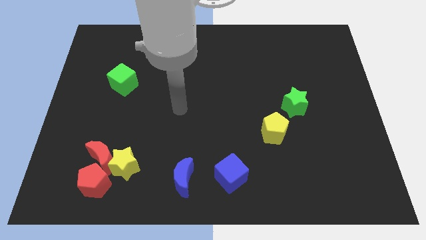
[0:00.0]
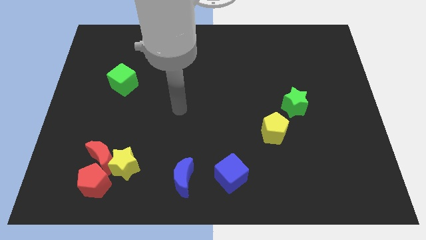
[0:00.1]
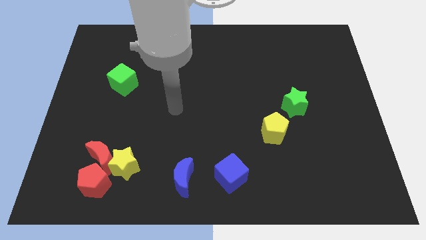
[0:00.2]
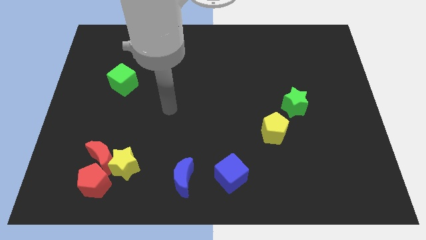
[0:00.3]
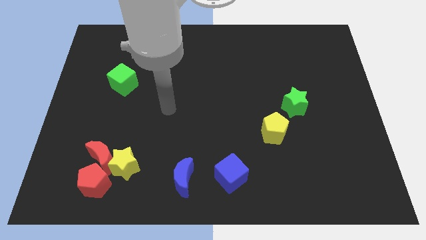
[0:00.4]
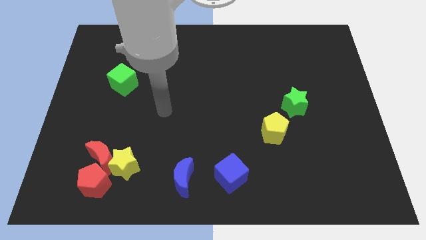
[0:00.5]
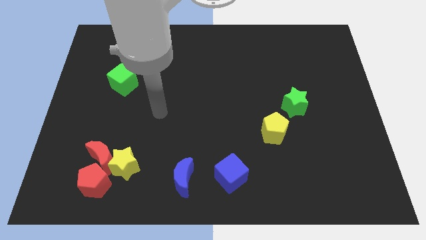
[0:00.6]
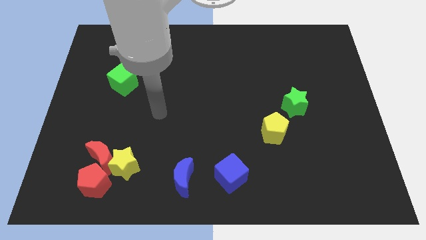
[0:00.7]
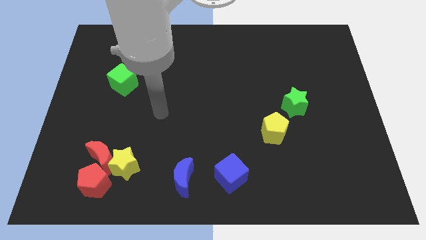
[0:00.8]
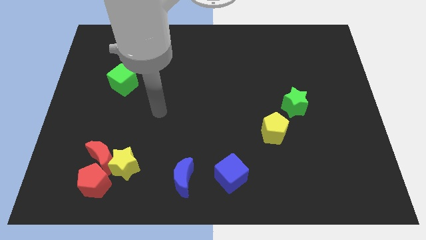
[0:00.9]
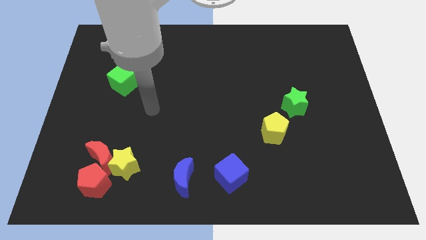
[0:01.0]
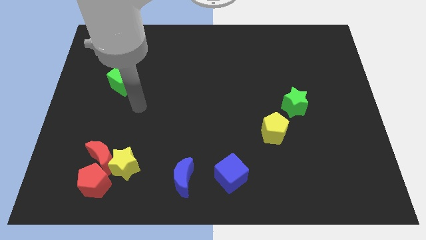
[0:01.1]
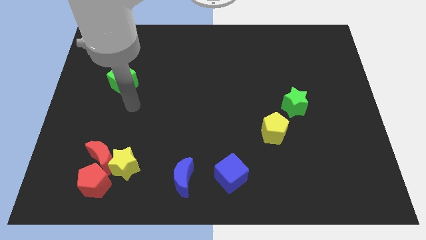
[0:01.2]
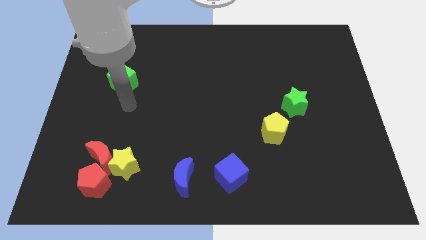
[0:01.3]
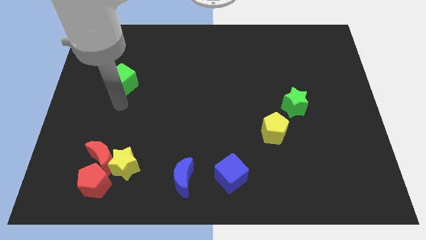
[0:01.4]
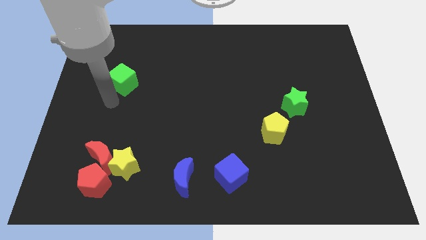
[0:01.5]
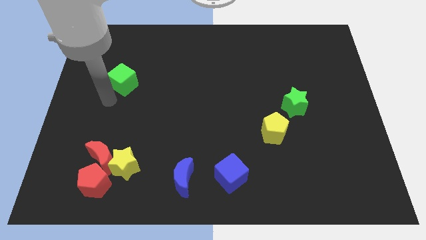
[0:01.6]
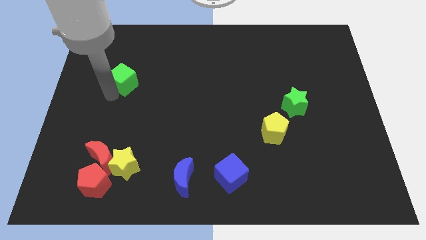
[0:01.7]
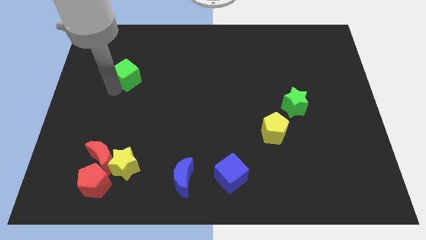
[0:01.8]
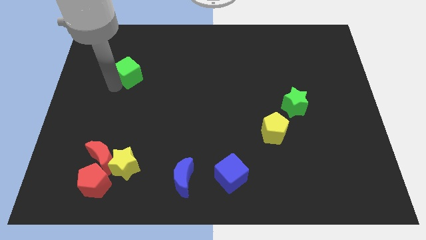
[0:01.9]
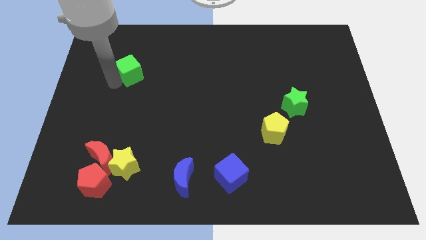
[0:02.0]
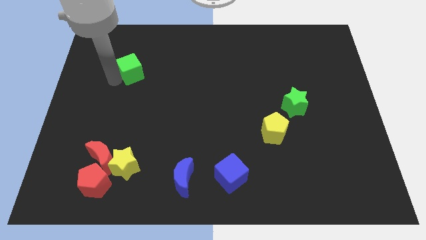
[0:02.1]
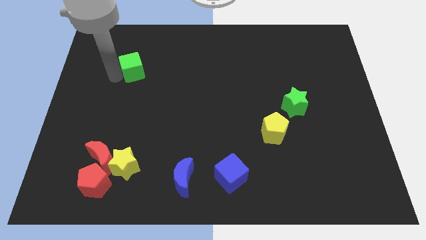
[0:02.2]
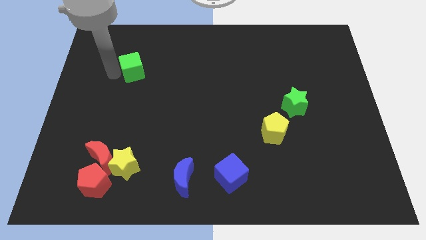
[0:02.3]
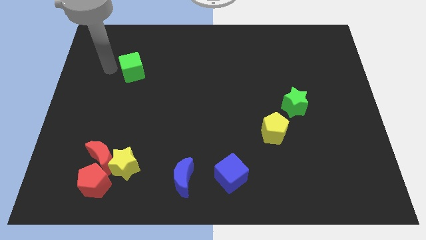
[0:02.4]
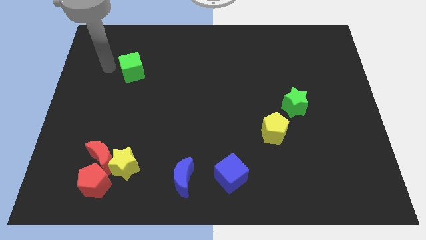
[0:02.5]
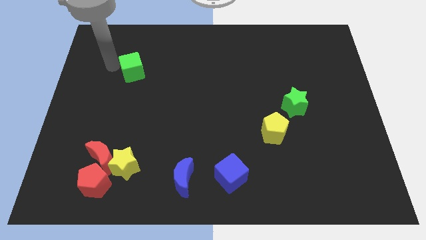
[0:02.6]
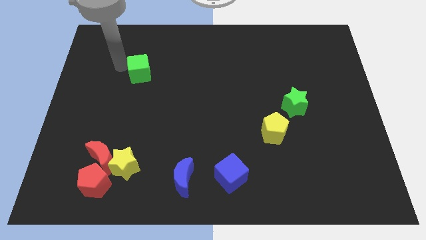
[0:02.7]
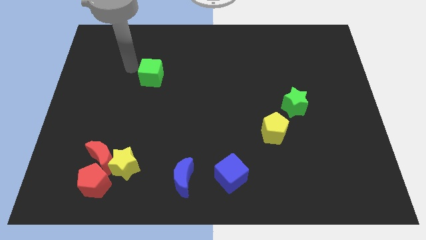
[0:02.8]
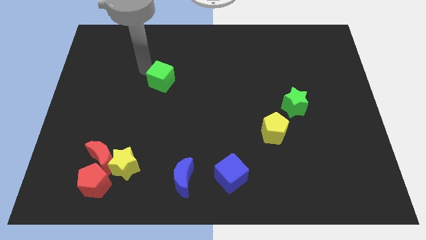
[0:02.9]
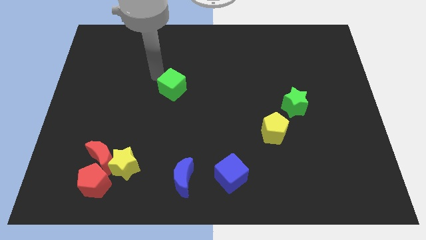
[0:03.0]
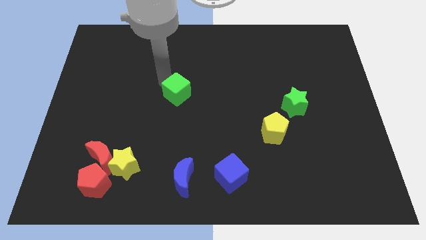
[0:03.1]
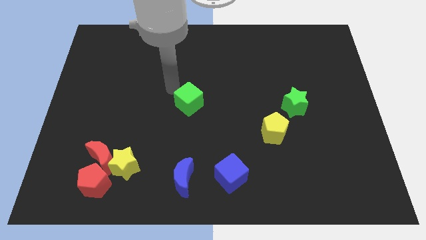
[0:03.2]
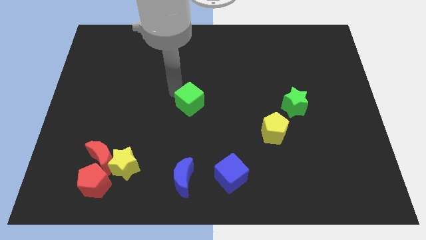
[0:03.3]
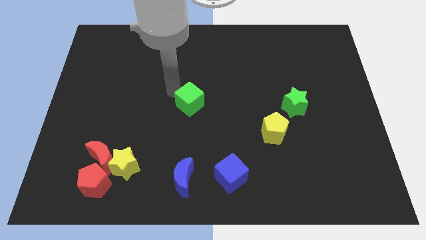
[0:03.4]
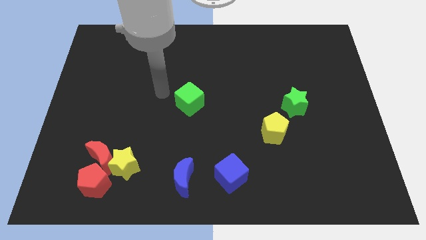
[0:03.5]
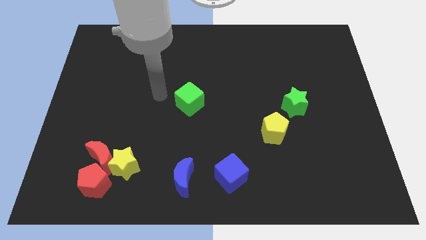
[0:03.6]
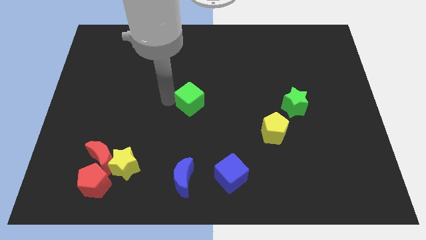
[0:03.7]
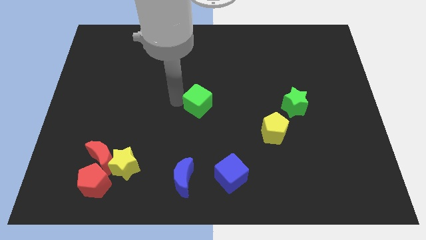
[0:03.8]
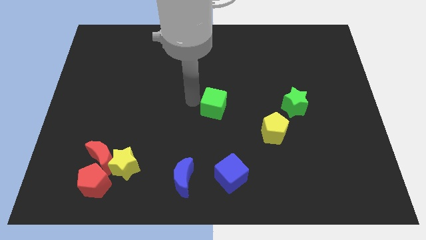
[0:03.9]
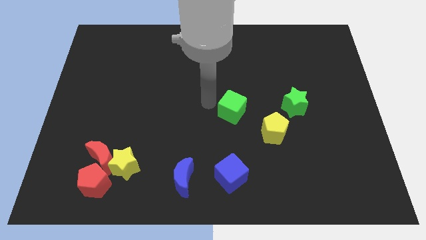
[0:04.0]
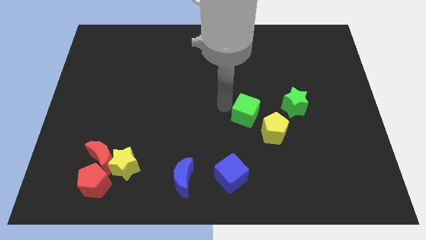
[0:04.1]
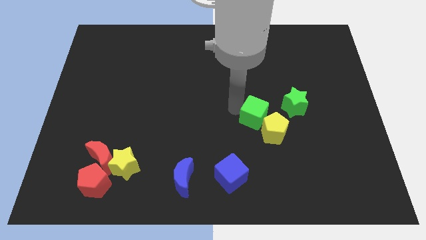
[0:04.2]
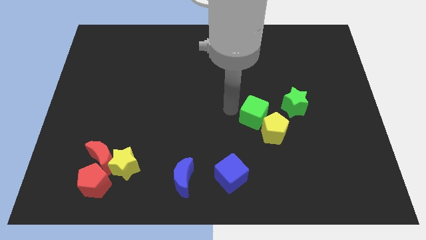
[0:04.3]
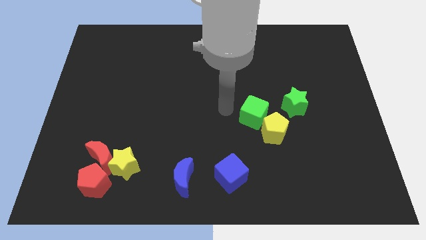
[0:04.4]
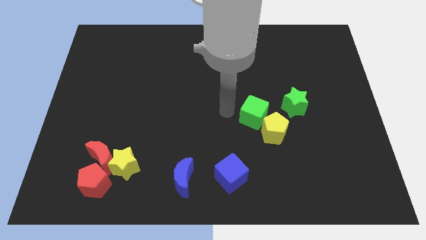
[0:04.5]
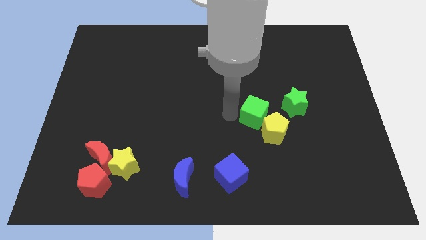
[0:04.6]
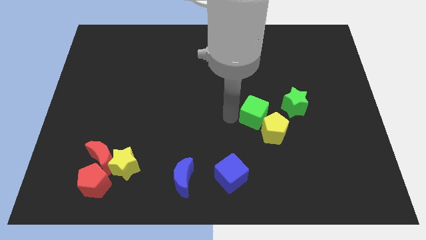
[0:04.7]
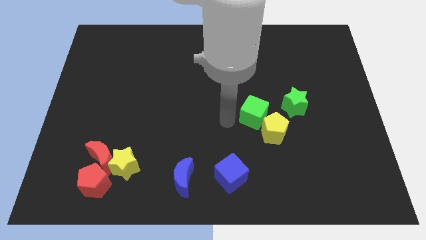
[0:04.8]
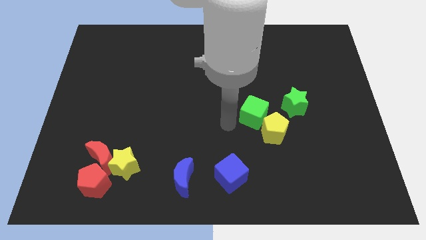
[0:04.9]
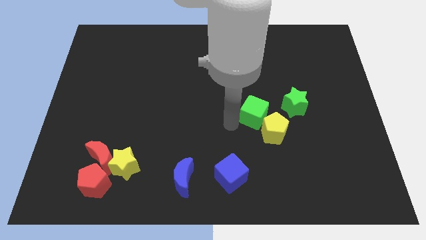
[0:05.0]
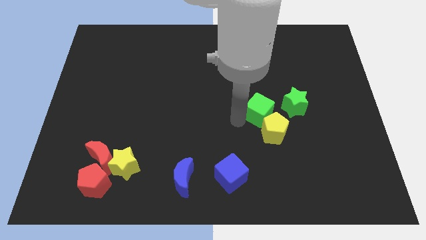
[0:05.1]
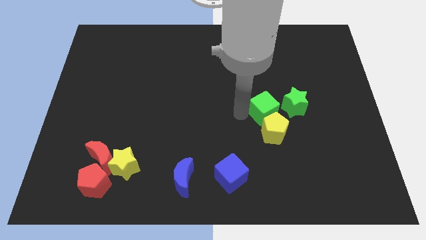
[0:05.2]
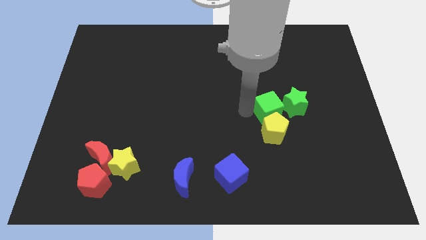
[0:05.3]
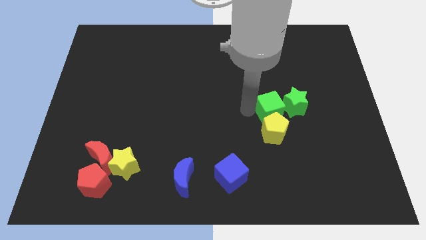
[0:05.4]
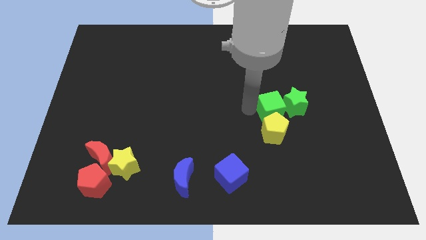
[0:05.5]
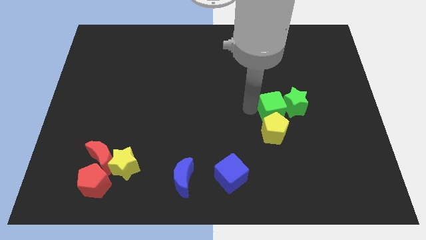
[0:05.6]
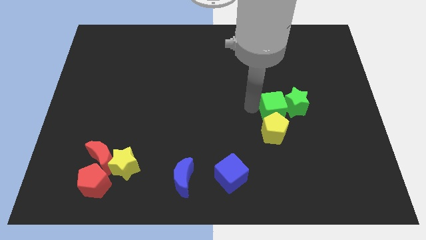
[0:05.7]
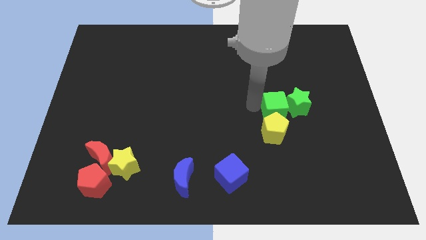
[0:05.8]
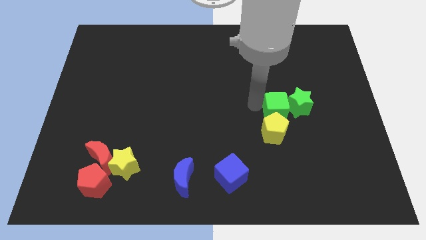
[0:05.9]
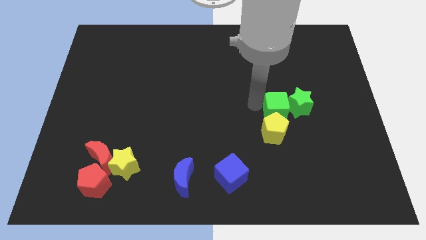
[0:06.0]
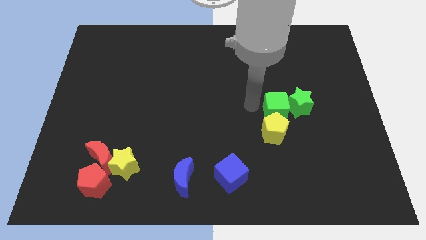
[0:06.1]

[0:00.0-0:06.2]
push the green cube to the left side of the green star

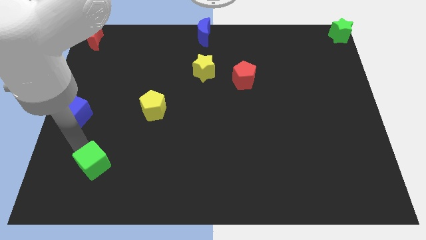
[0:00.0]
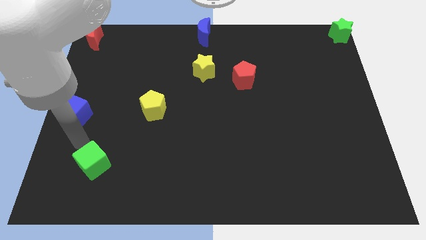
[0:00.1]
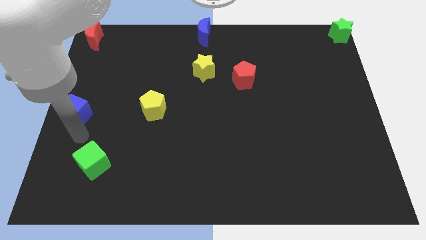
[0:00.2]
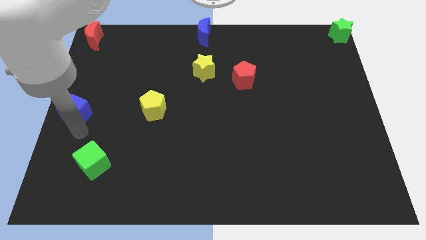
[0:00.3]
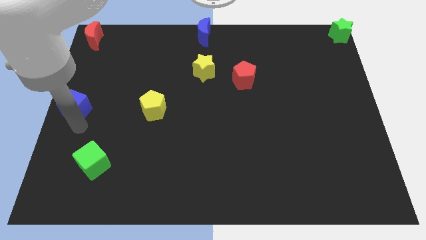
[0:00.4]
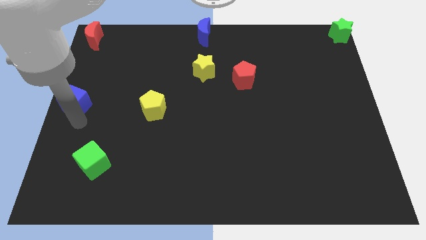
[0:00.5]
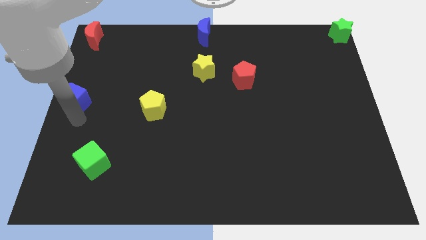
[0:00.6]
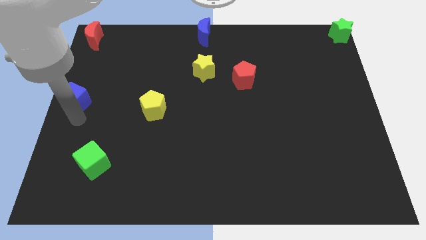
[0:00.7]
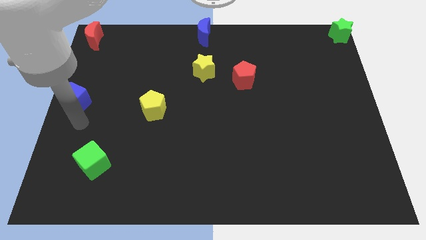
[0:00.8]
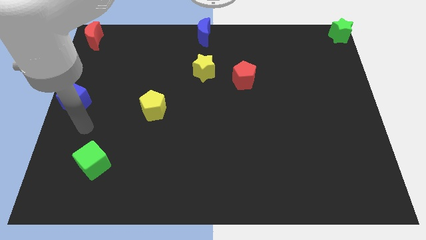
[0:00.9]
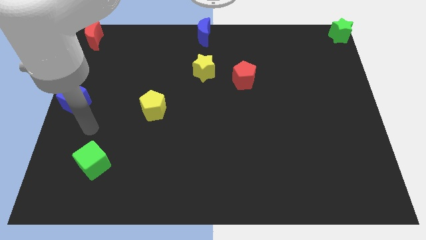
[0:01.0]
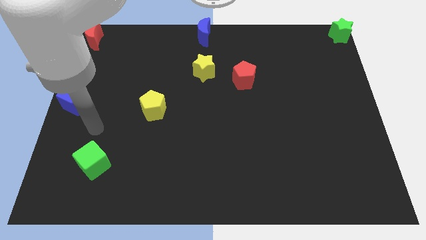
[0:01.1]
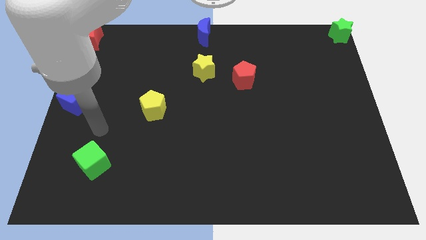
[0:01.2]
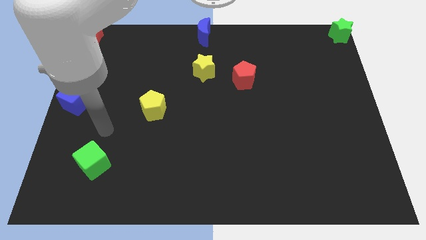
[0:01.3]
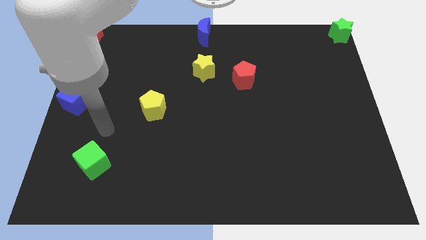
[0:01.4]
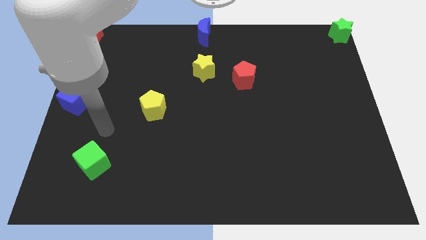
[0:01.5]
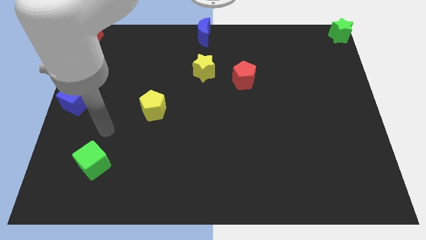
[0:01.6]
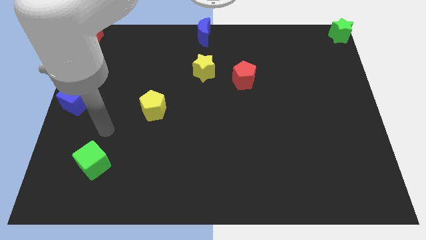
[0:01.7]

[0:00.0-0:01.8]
move the blue cube to left center of the board

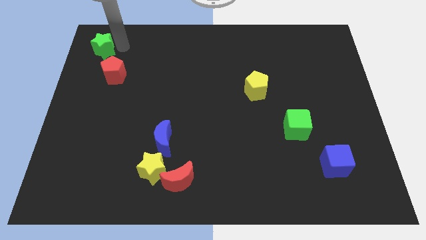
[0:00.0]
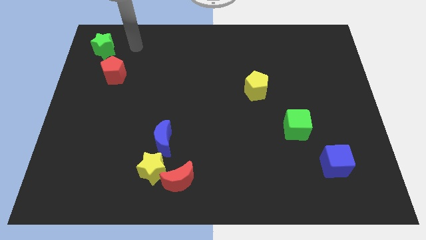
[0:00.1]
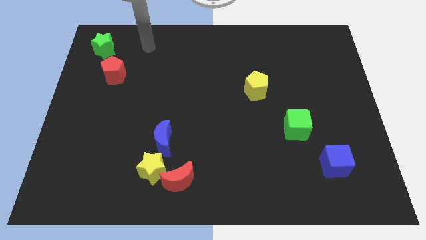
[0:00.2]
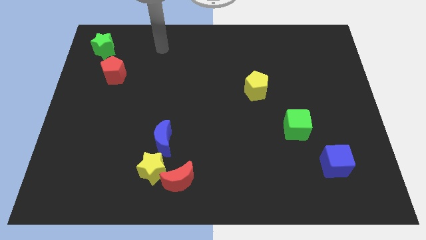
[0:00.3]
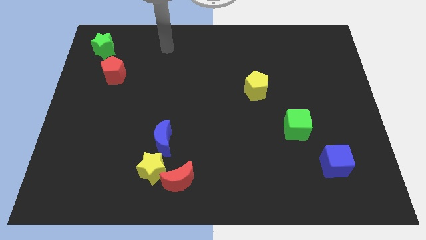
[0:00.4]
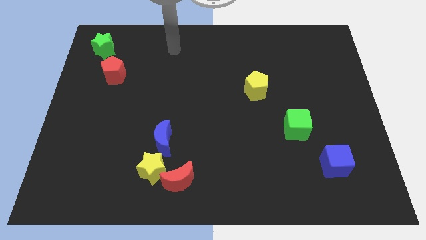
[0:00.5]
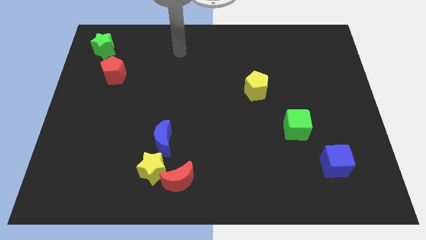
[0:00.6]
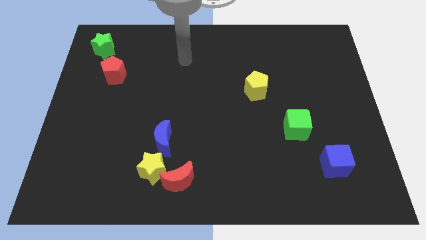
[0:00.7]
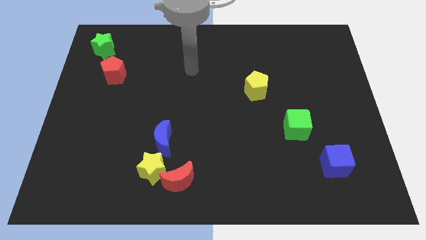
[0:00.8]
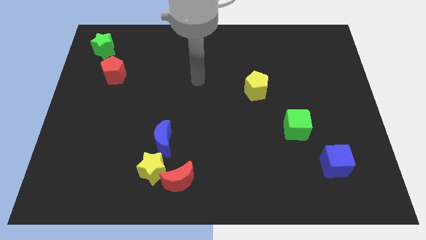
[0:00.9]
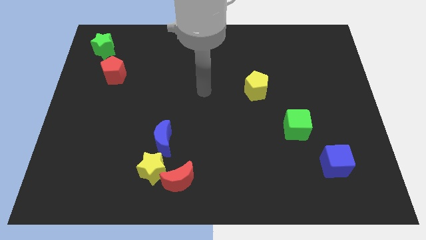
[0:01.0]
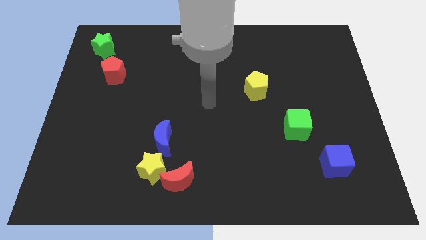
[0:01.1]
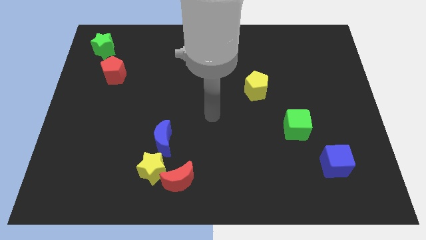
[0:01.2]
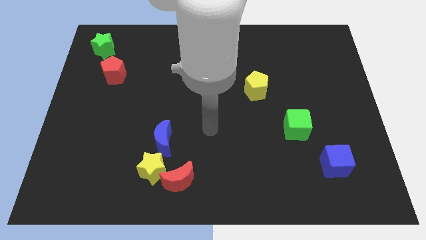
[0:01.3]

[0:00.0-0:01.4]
move your arm to the center of the board
